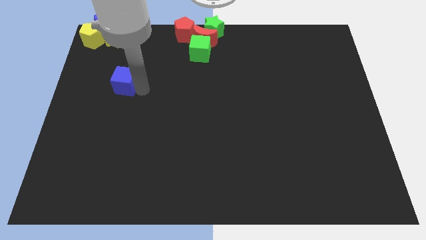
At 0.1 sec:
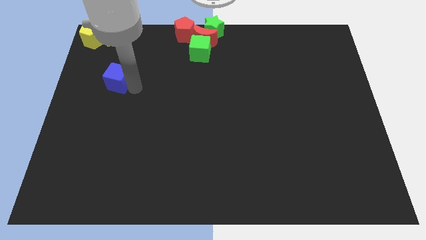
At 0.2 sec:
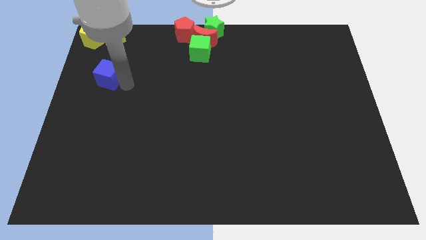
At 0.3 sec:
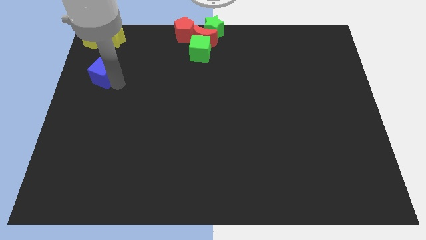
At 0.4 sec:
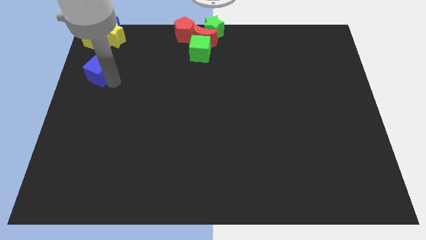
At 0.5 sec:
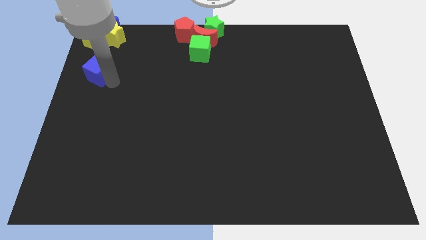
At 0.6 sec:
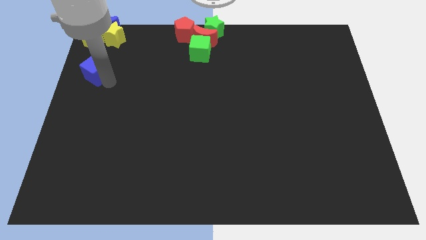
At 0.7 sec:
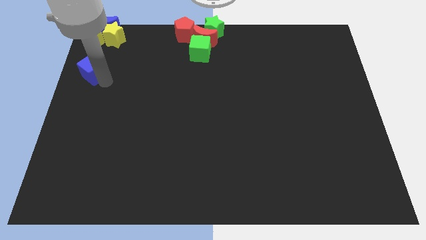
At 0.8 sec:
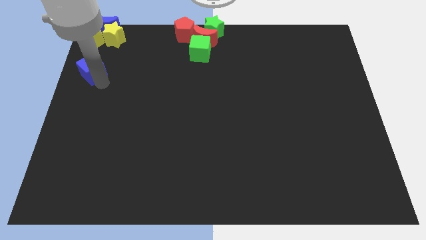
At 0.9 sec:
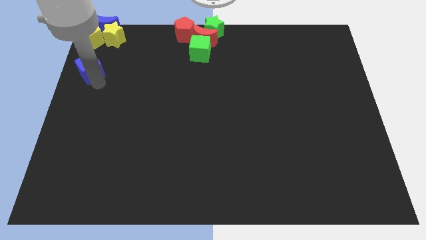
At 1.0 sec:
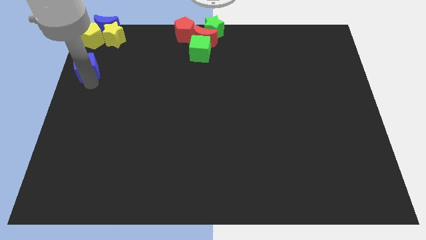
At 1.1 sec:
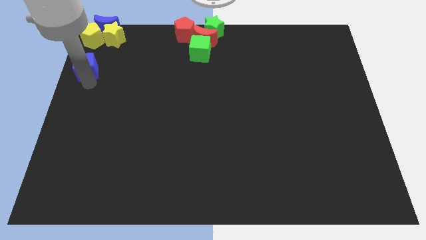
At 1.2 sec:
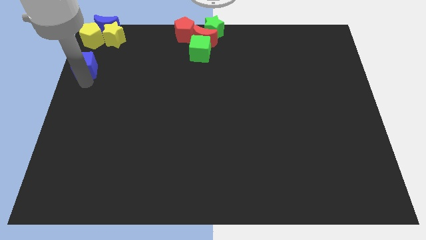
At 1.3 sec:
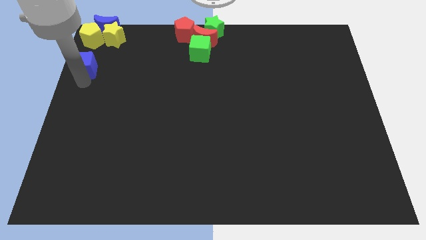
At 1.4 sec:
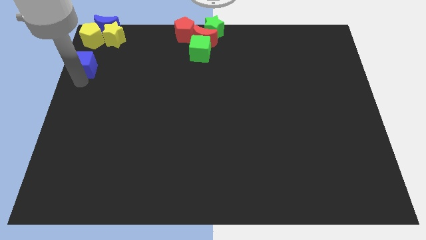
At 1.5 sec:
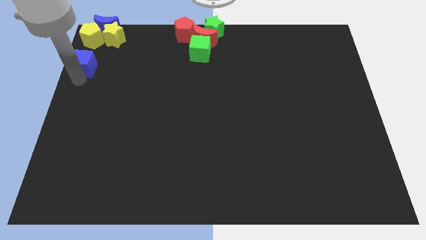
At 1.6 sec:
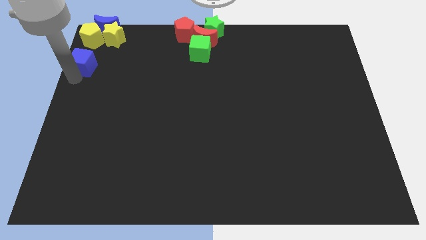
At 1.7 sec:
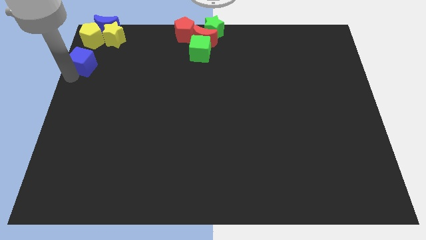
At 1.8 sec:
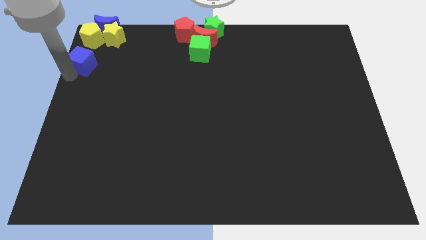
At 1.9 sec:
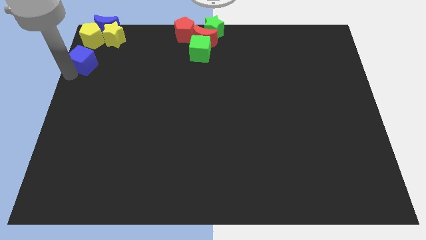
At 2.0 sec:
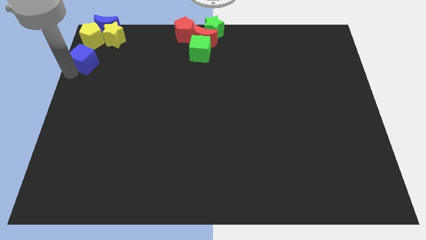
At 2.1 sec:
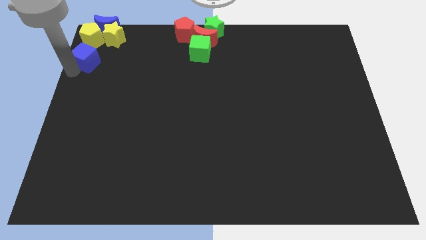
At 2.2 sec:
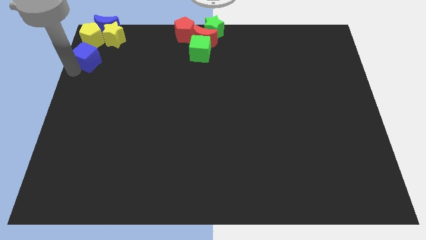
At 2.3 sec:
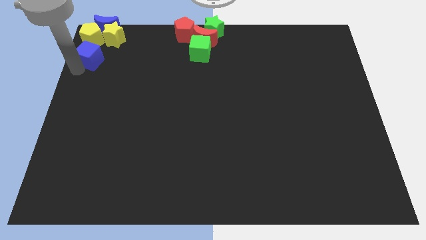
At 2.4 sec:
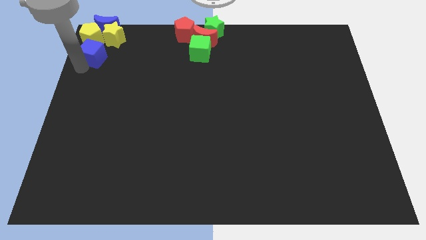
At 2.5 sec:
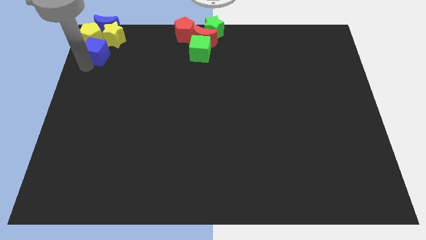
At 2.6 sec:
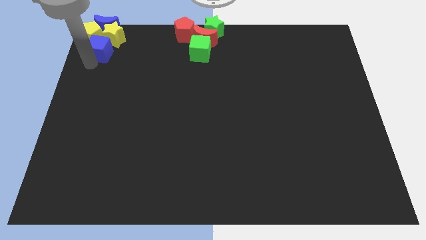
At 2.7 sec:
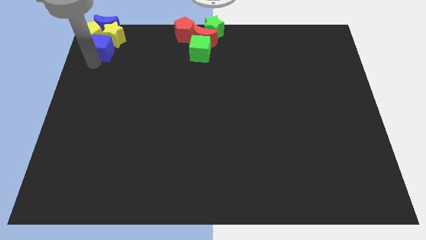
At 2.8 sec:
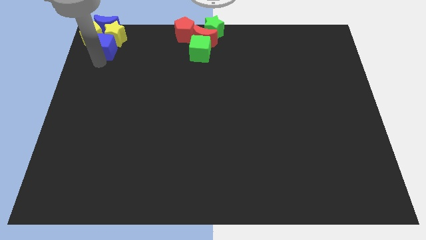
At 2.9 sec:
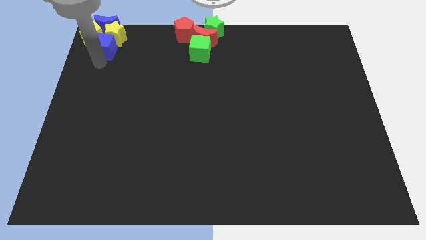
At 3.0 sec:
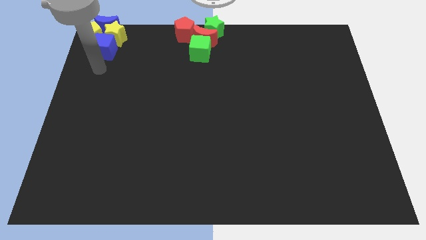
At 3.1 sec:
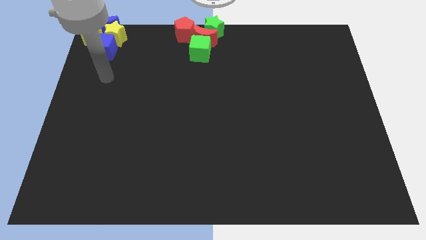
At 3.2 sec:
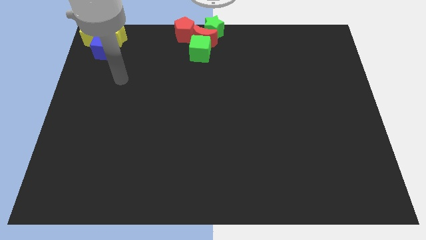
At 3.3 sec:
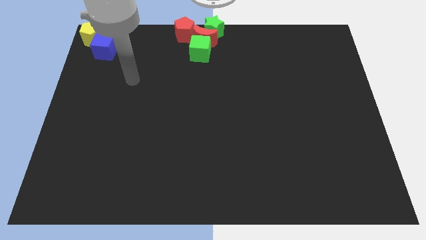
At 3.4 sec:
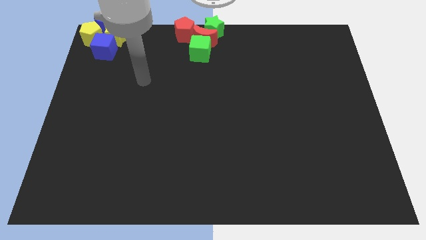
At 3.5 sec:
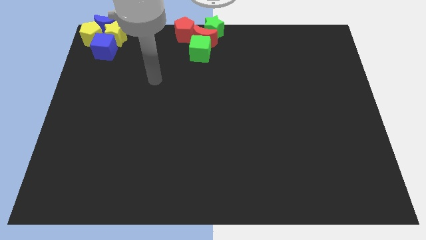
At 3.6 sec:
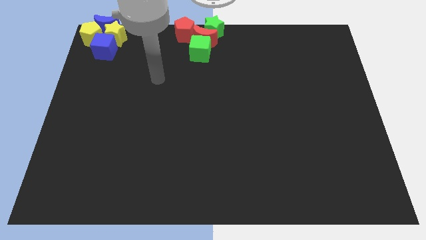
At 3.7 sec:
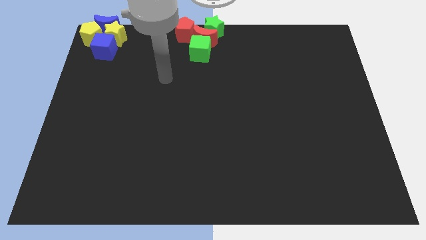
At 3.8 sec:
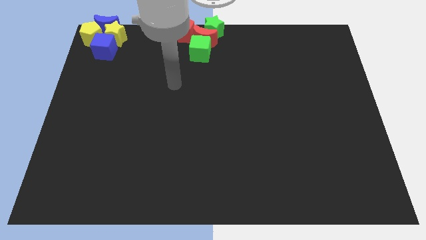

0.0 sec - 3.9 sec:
push the blue cube into the bottom side of the group of yellow blocks

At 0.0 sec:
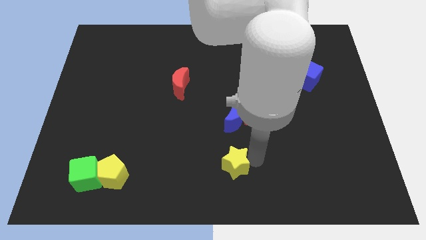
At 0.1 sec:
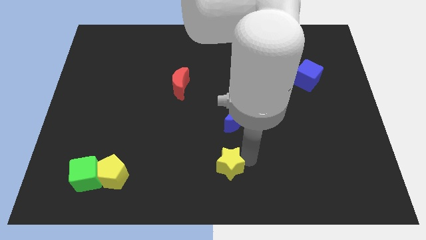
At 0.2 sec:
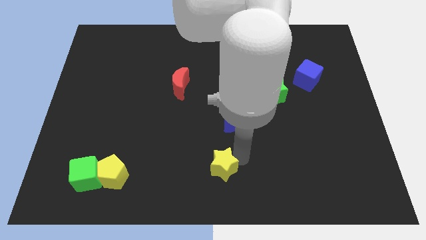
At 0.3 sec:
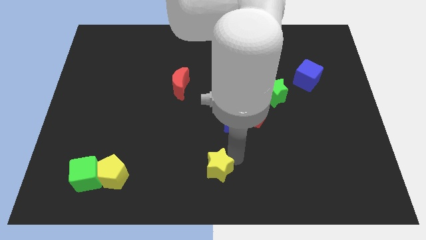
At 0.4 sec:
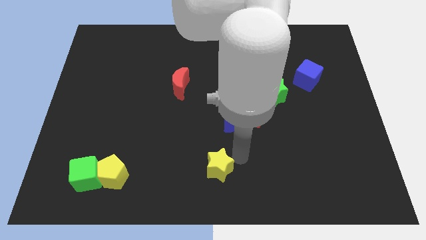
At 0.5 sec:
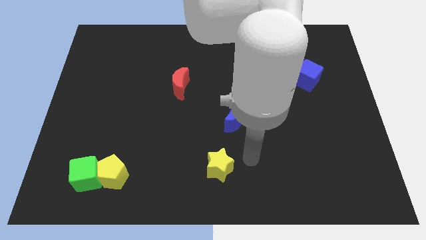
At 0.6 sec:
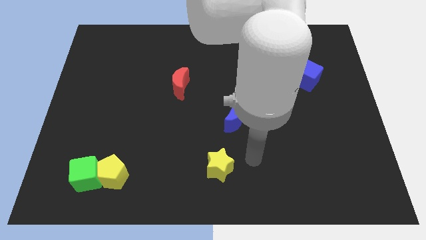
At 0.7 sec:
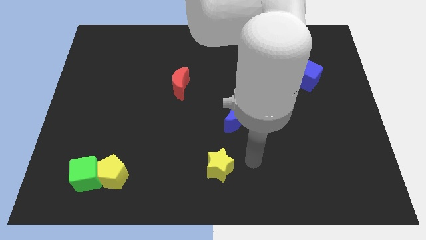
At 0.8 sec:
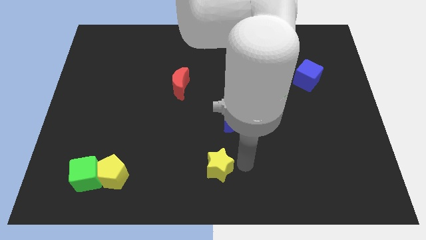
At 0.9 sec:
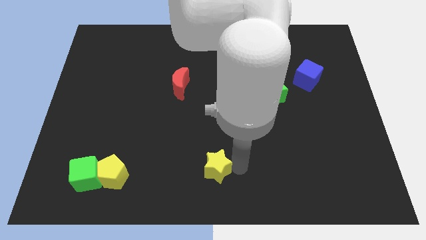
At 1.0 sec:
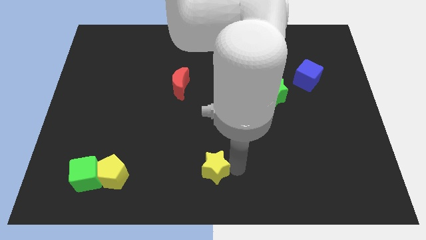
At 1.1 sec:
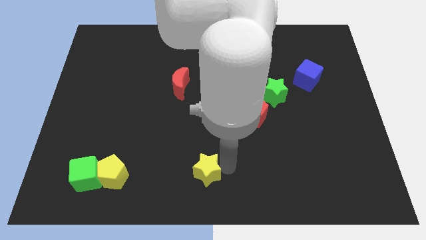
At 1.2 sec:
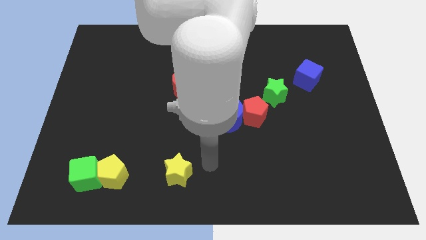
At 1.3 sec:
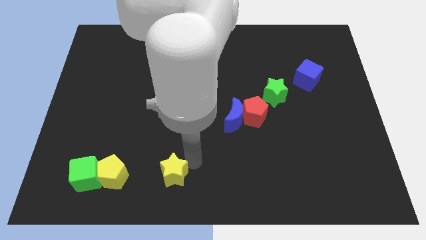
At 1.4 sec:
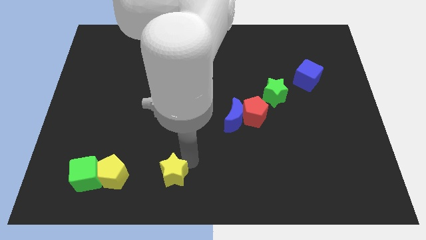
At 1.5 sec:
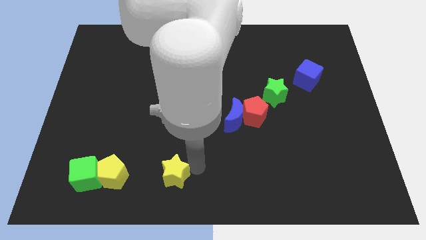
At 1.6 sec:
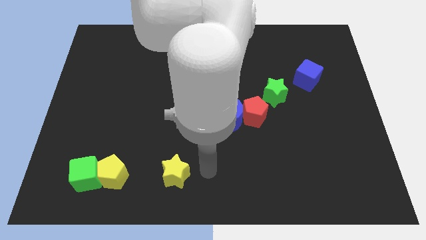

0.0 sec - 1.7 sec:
push yellow star below red crescent

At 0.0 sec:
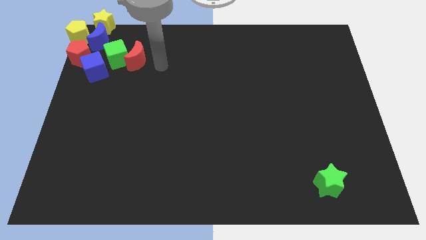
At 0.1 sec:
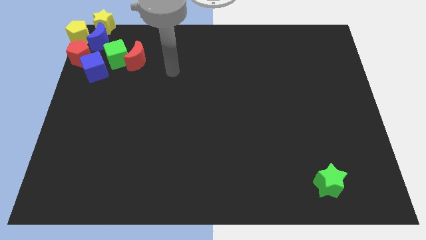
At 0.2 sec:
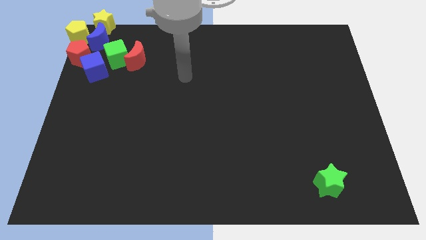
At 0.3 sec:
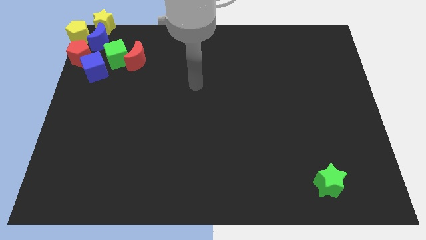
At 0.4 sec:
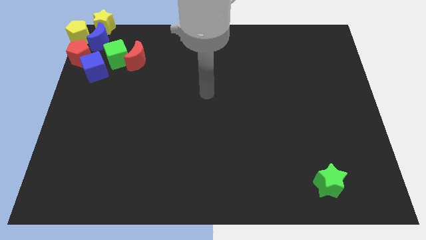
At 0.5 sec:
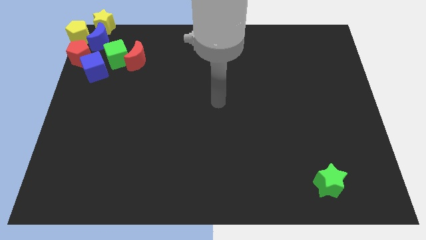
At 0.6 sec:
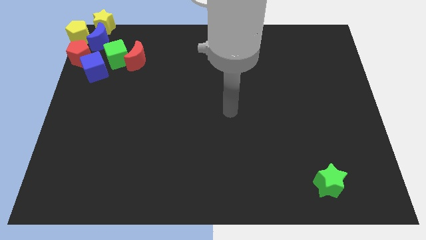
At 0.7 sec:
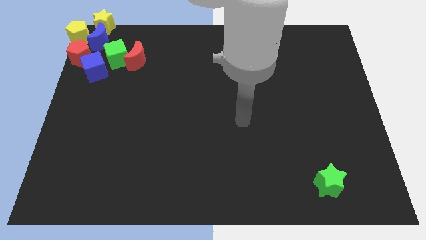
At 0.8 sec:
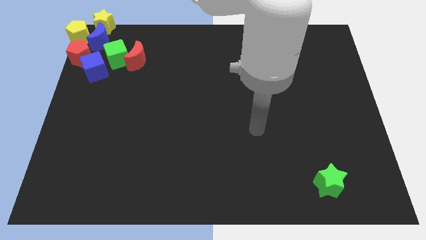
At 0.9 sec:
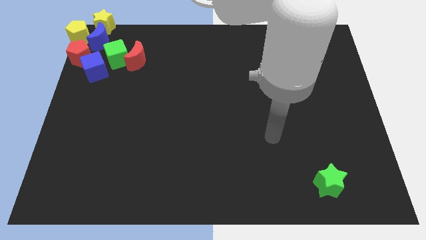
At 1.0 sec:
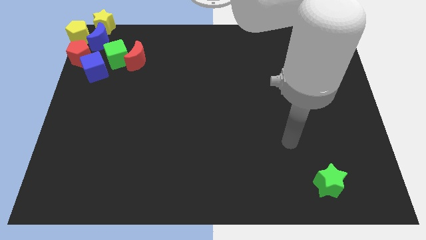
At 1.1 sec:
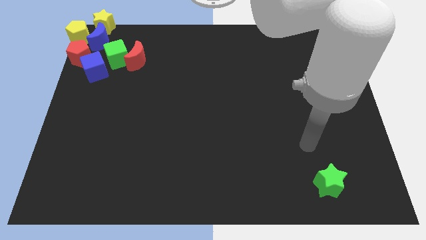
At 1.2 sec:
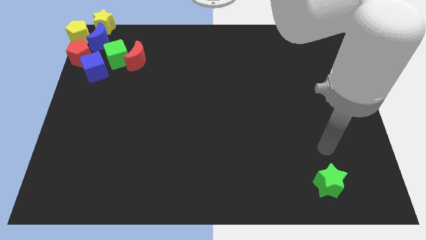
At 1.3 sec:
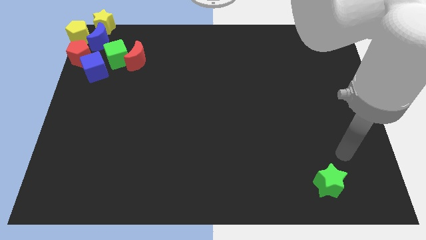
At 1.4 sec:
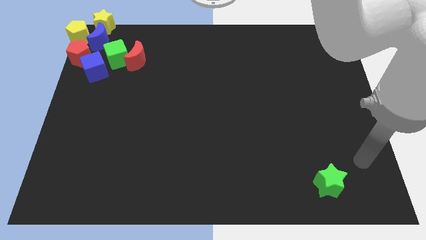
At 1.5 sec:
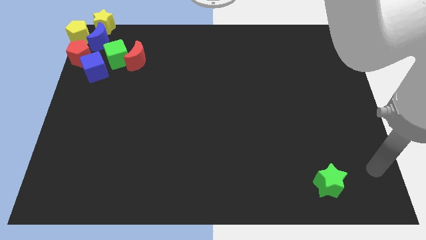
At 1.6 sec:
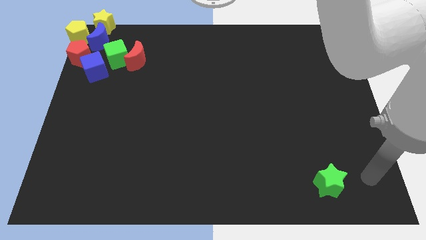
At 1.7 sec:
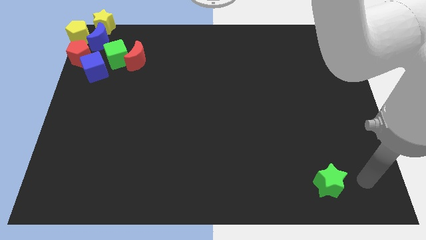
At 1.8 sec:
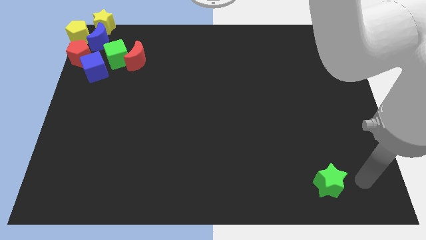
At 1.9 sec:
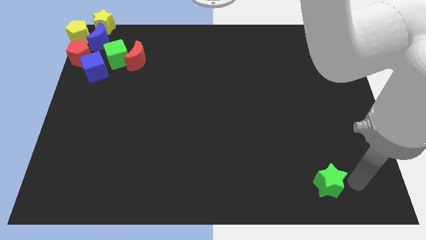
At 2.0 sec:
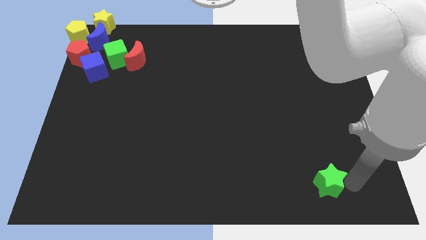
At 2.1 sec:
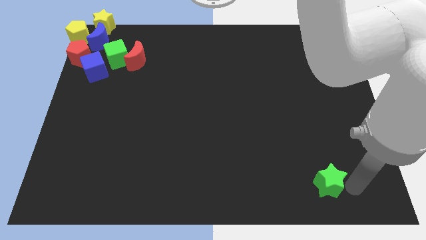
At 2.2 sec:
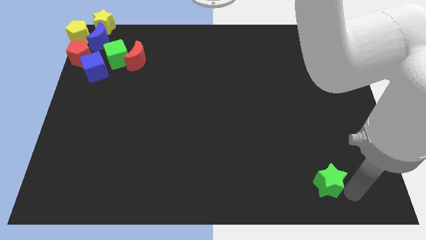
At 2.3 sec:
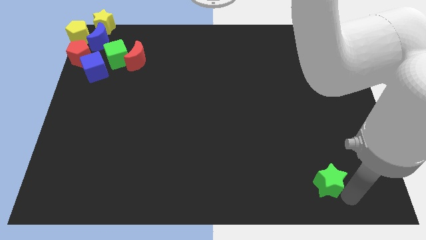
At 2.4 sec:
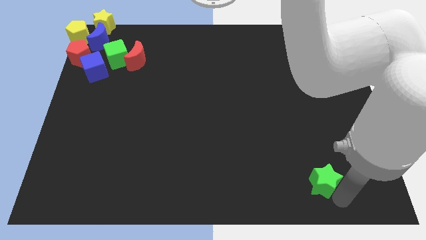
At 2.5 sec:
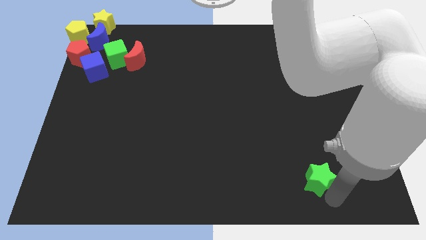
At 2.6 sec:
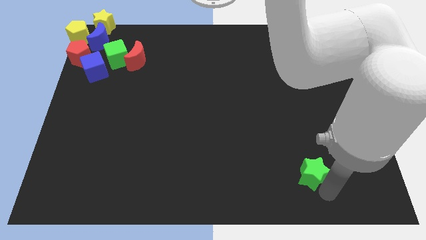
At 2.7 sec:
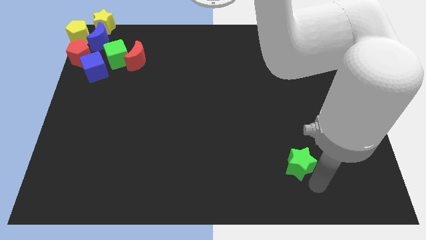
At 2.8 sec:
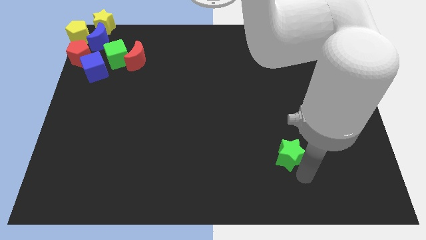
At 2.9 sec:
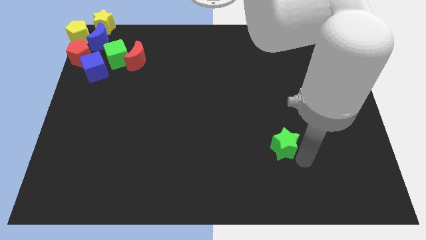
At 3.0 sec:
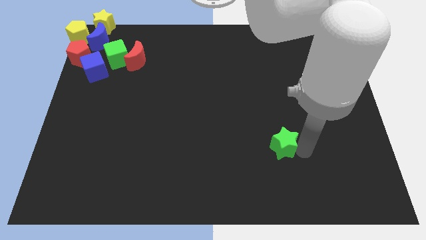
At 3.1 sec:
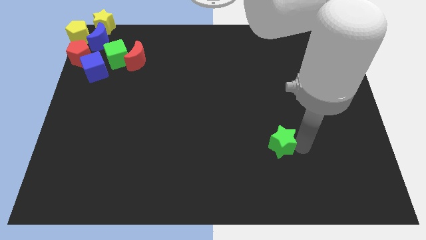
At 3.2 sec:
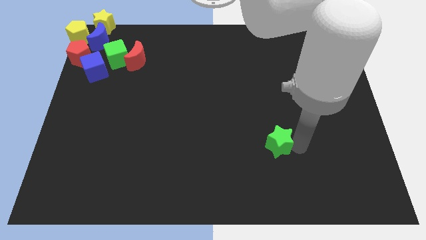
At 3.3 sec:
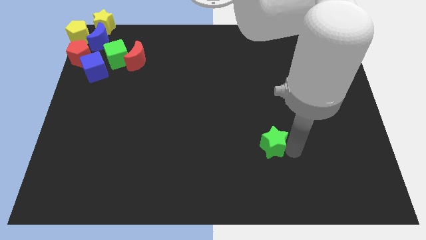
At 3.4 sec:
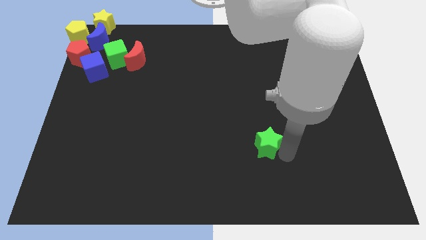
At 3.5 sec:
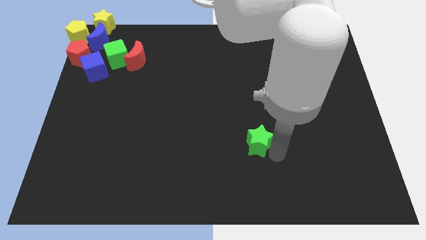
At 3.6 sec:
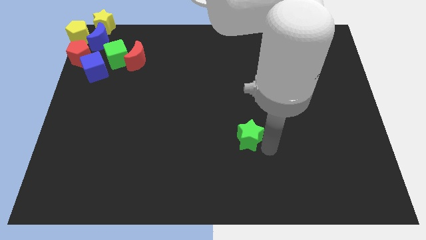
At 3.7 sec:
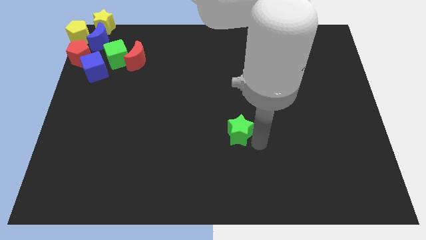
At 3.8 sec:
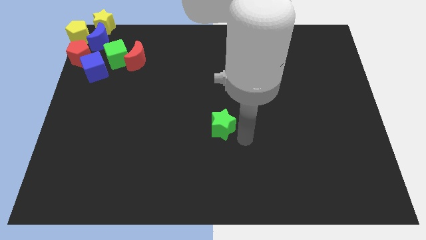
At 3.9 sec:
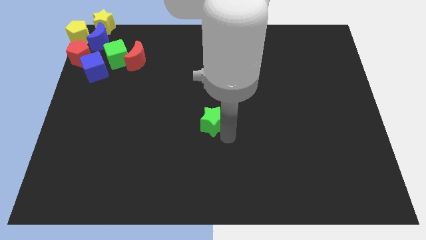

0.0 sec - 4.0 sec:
move the green star to the center of the board
